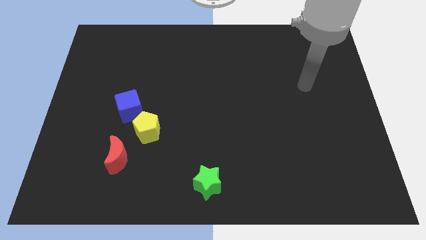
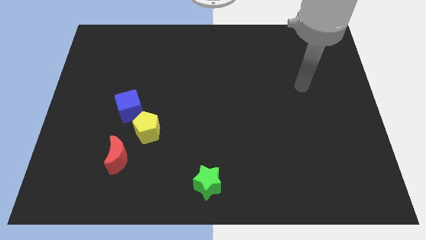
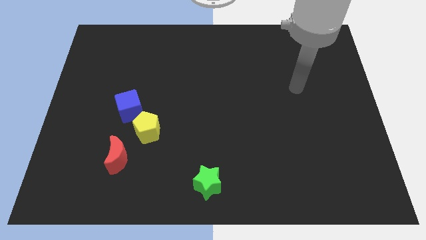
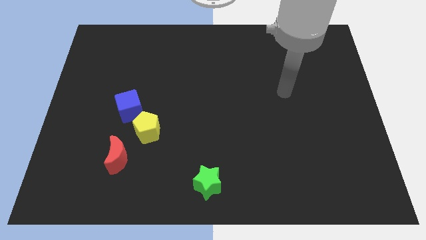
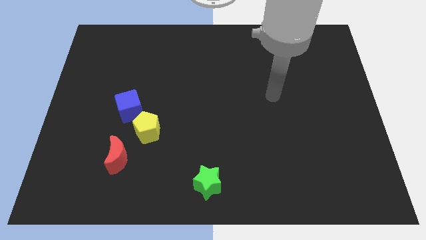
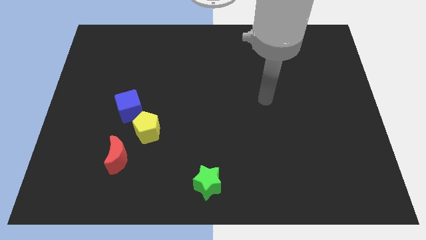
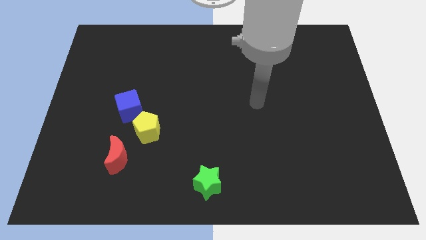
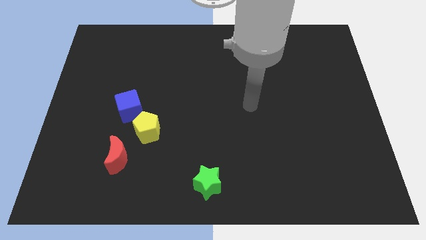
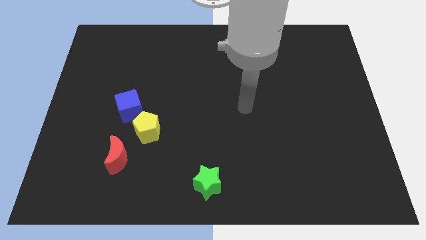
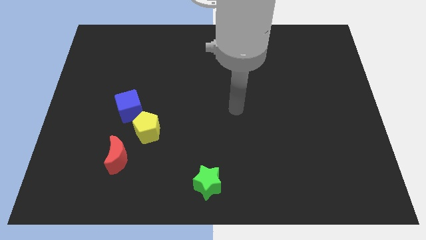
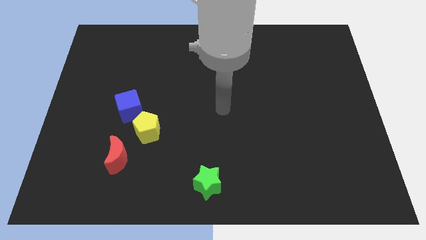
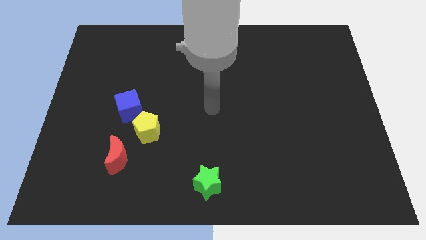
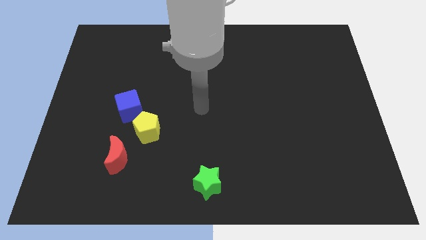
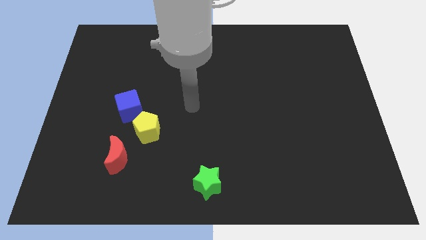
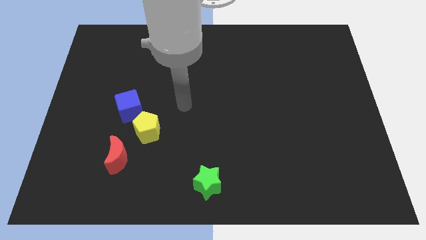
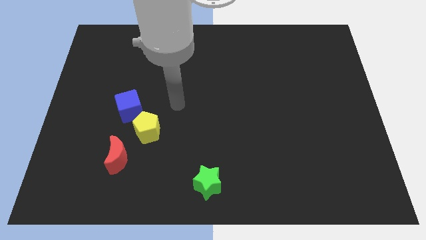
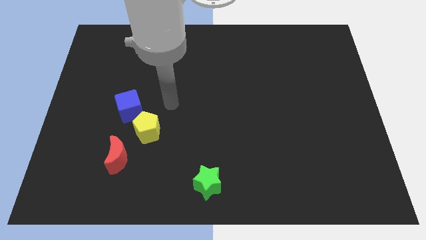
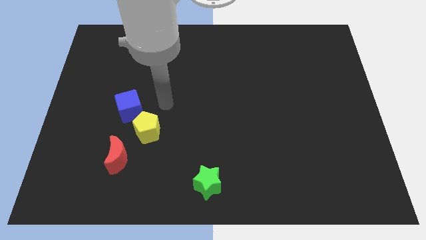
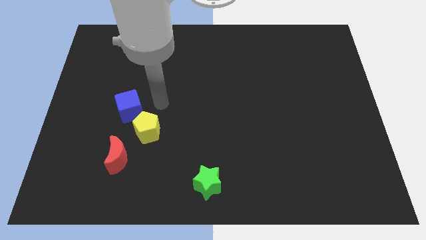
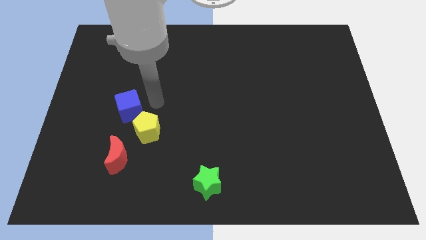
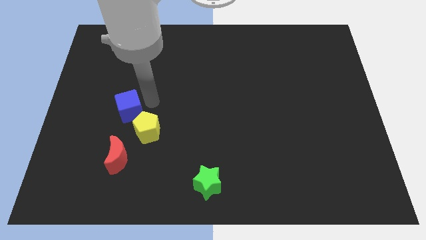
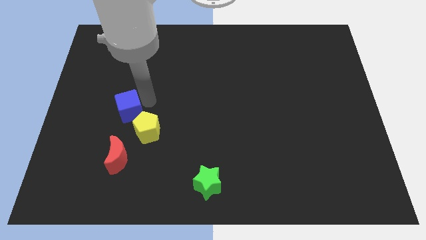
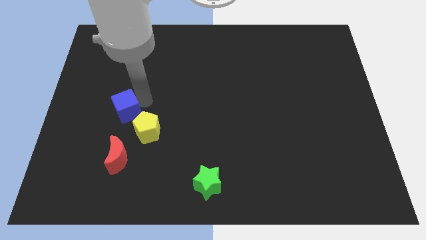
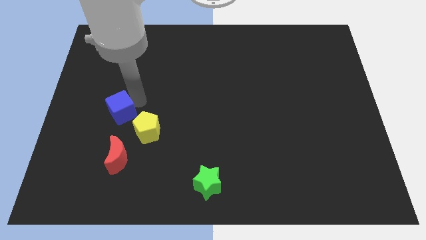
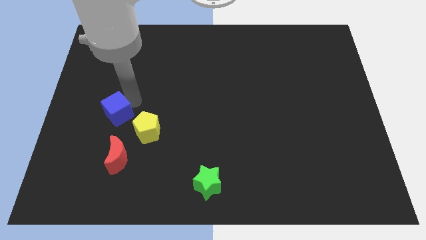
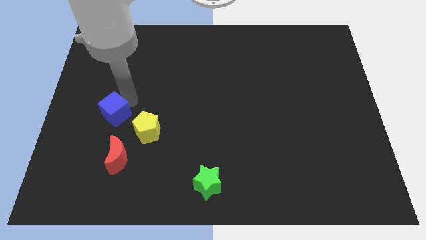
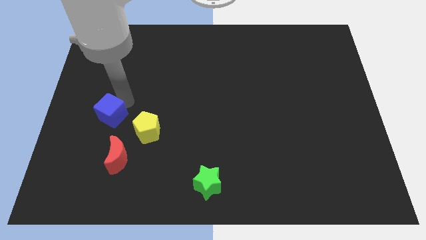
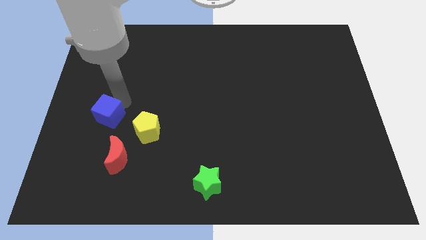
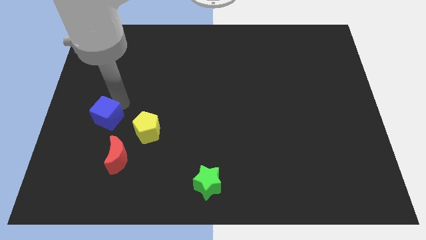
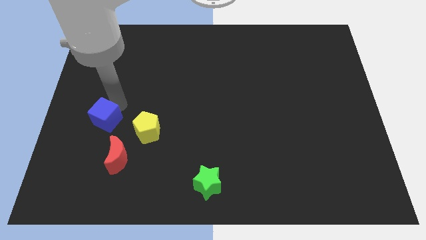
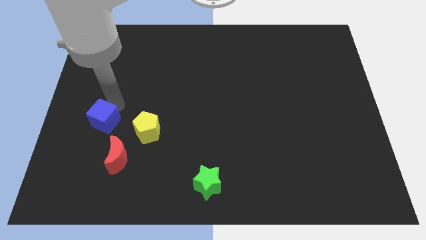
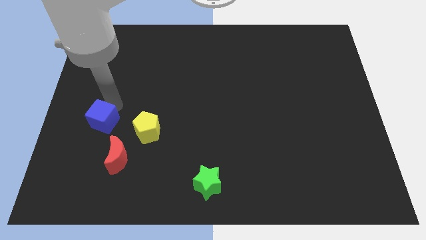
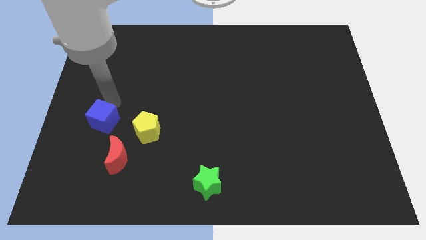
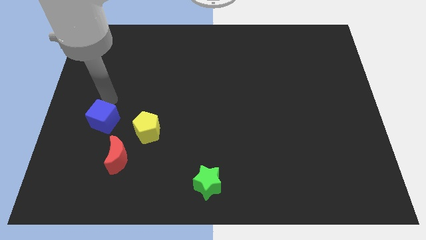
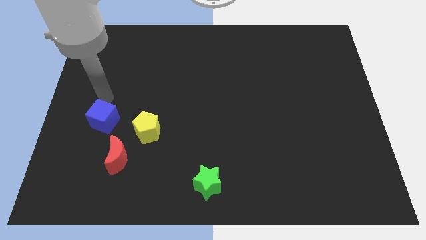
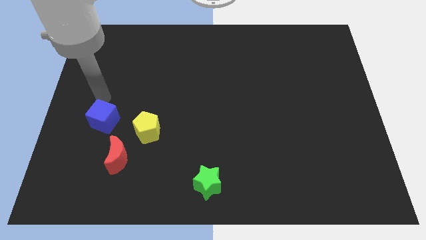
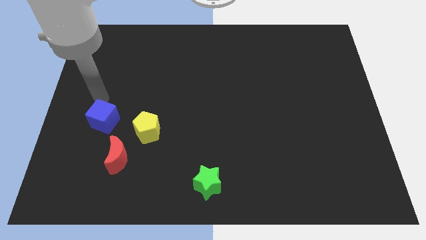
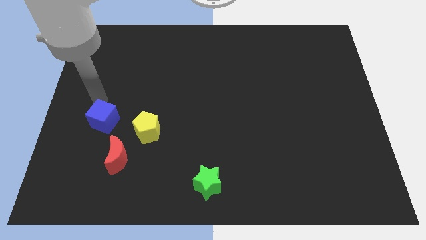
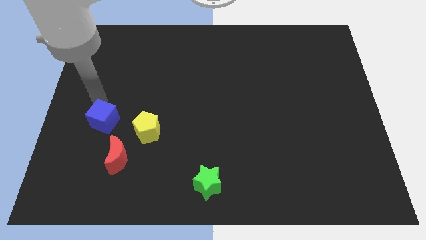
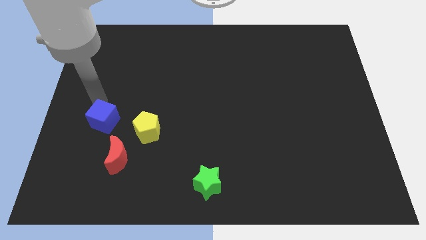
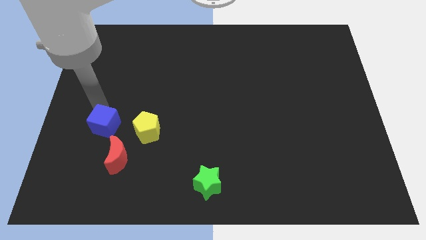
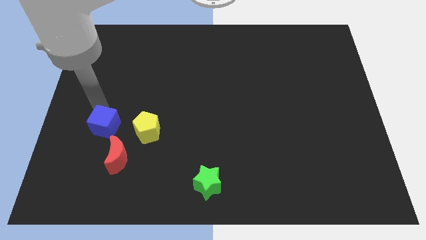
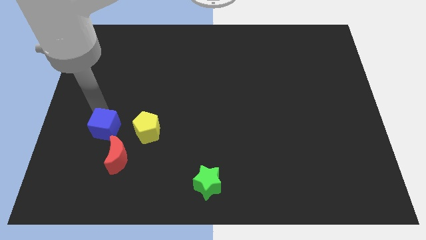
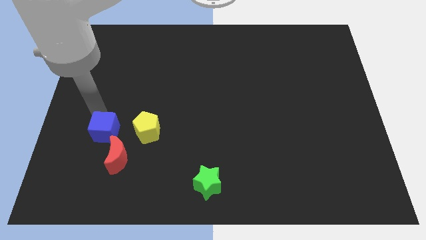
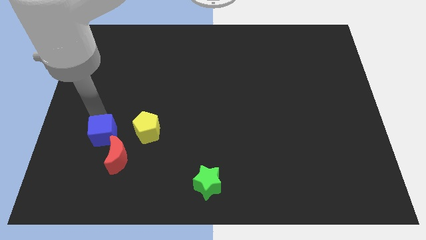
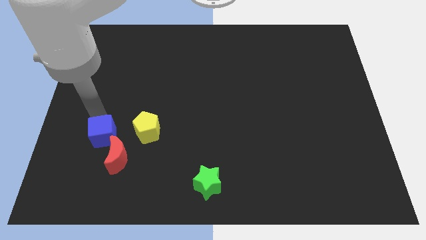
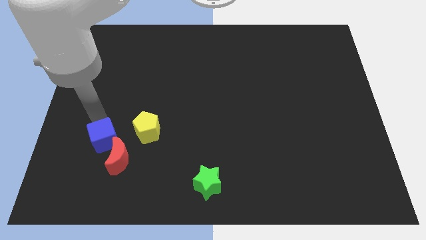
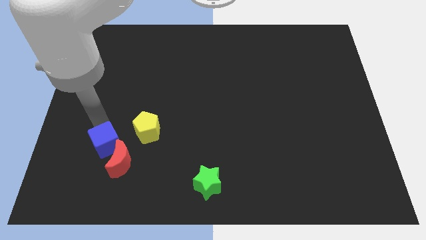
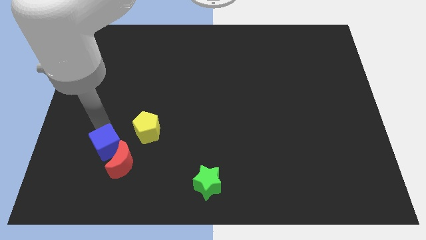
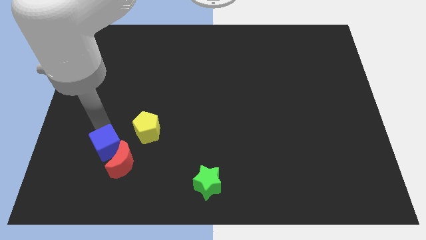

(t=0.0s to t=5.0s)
move the blue cube close to the red block

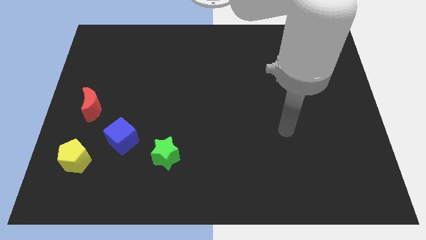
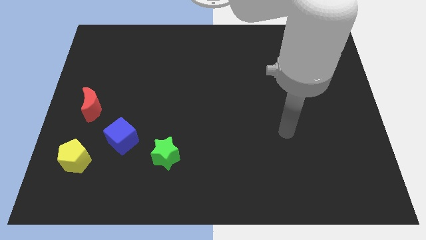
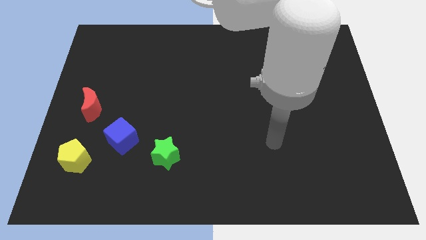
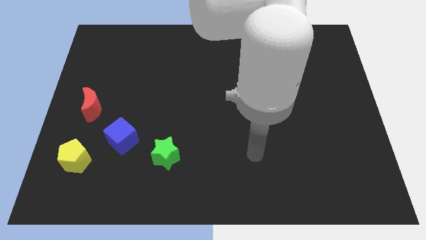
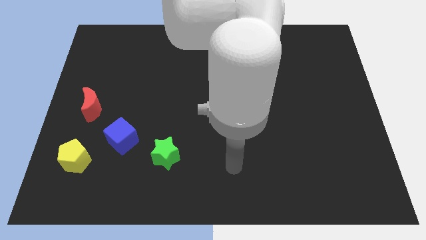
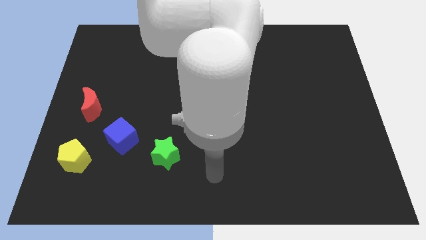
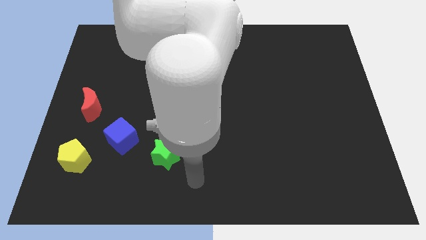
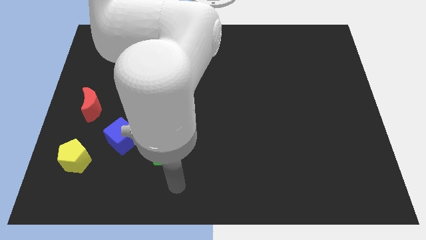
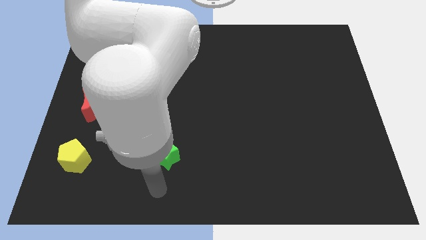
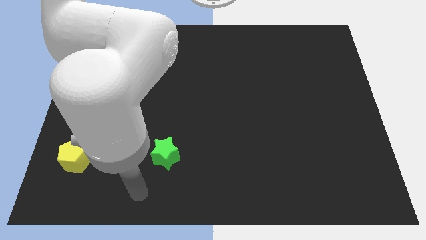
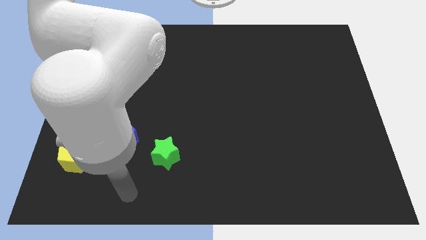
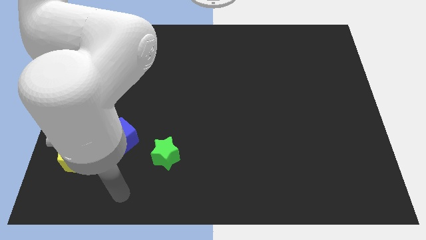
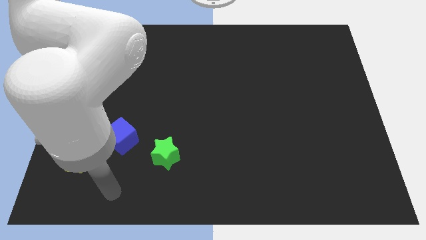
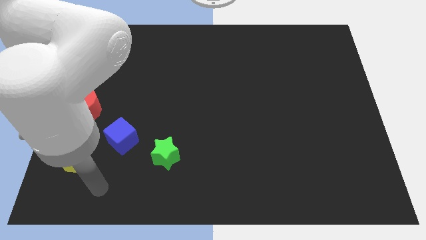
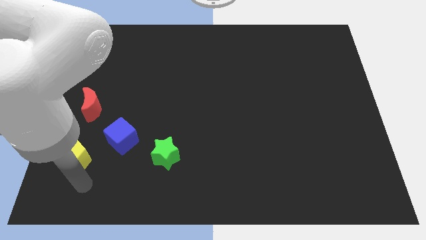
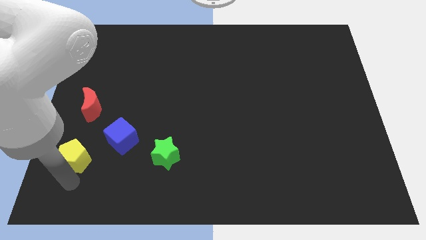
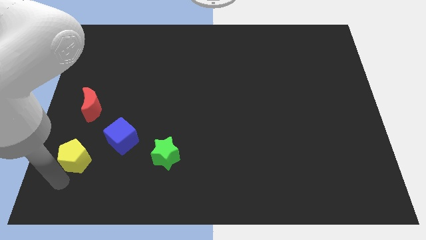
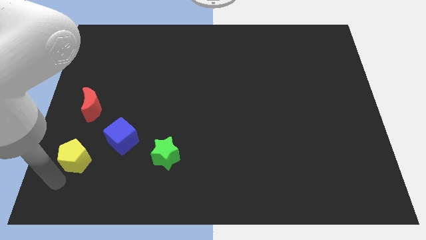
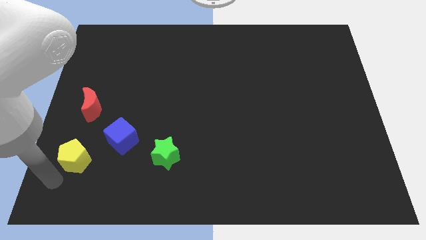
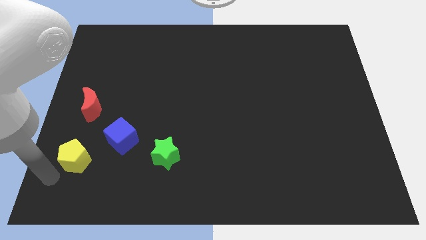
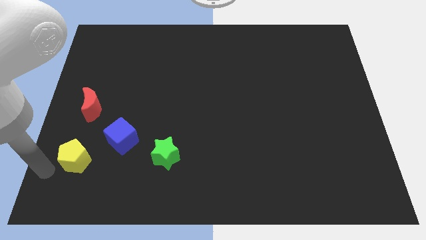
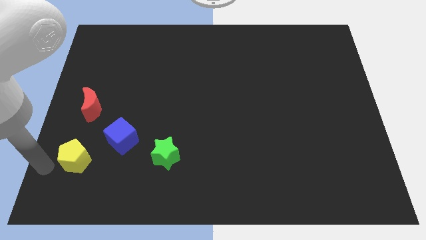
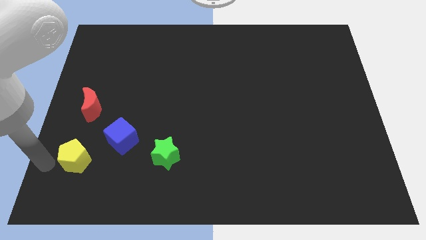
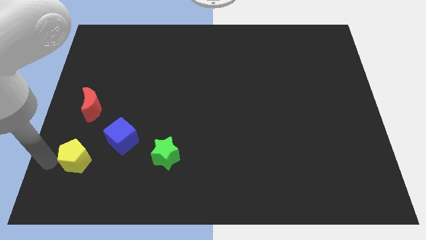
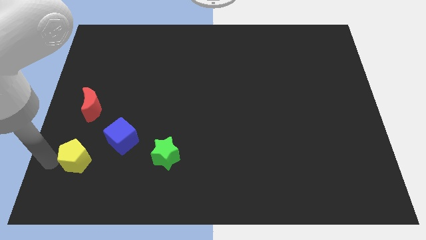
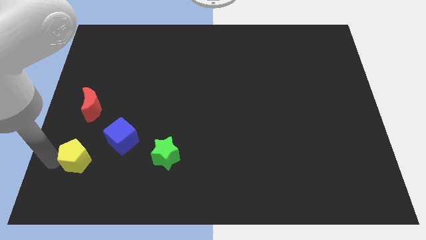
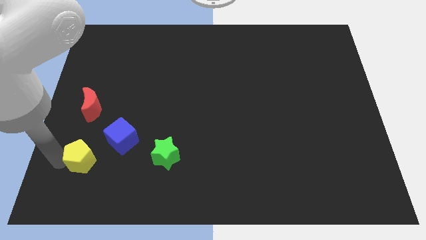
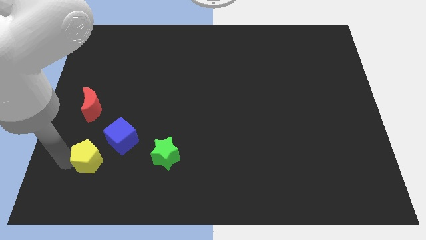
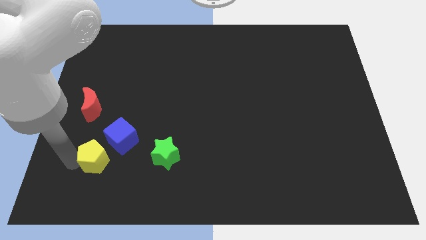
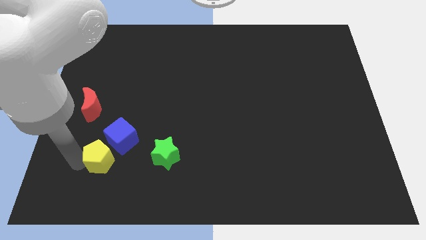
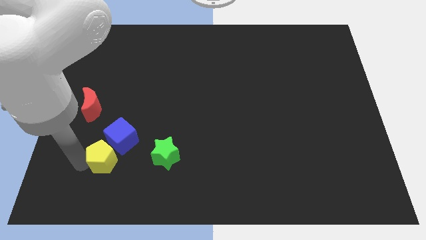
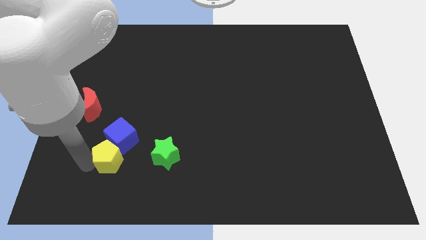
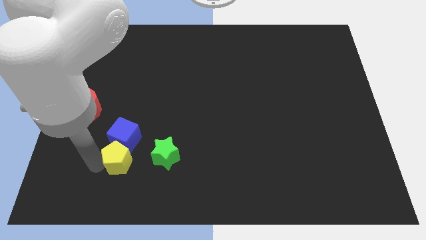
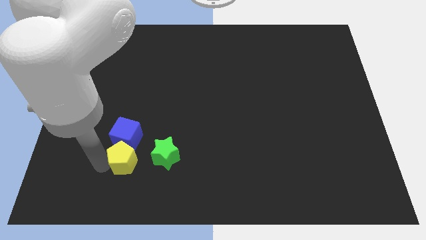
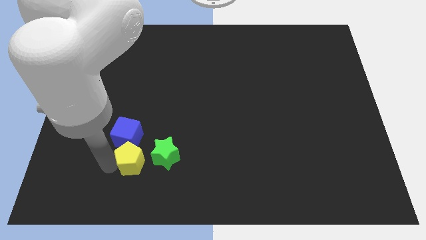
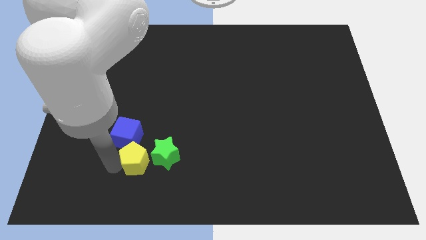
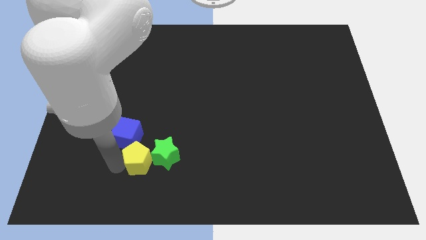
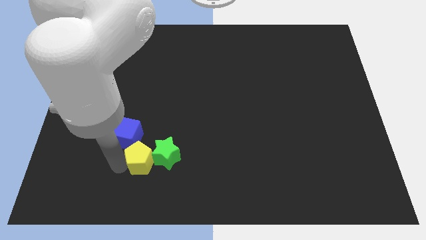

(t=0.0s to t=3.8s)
push the pentagon close to the green block
